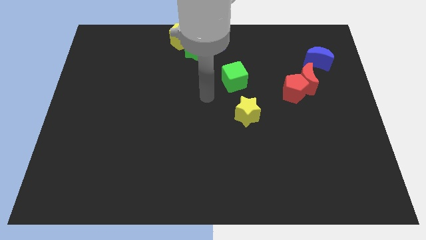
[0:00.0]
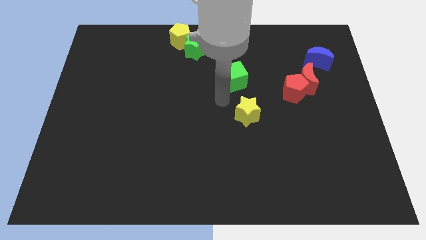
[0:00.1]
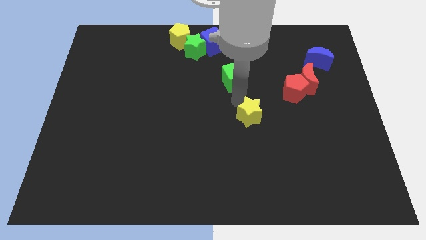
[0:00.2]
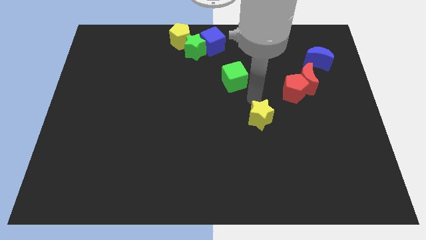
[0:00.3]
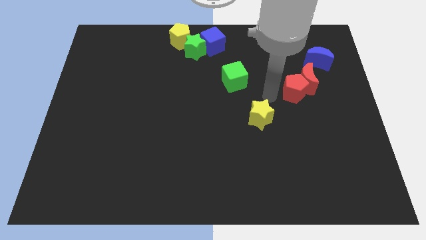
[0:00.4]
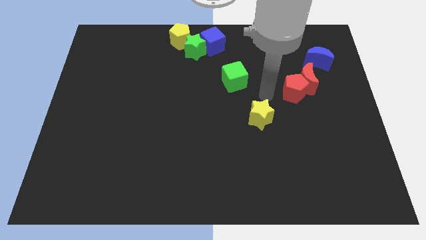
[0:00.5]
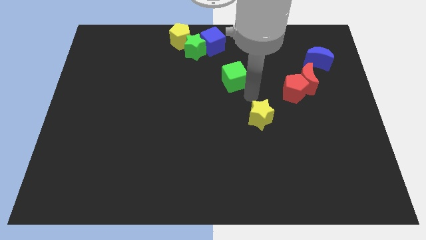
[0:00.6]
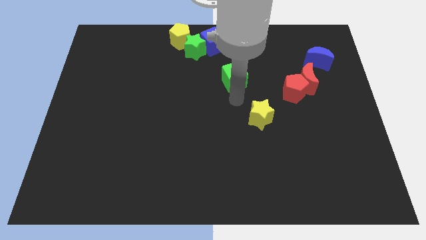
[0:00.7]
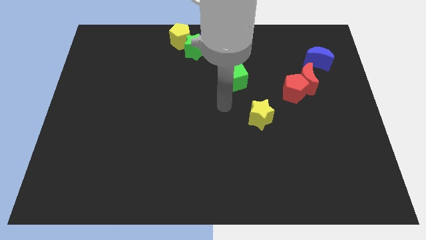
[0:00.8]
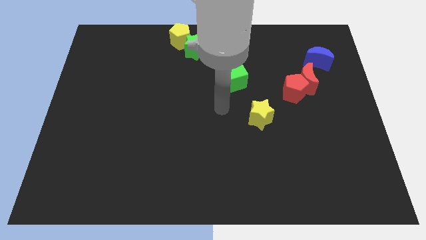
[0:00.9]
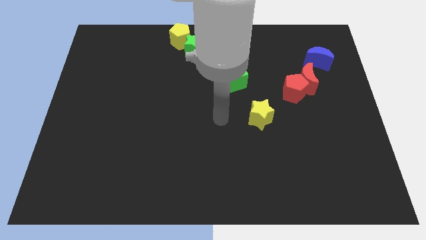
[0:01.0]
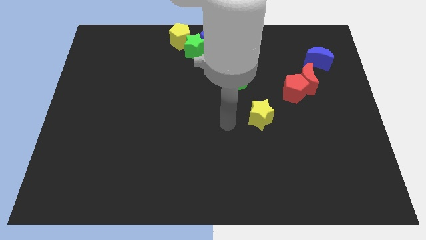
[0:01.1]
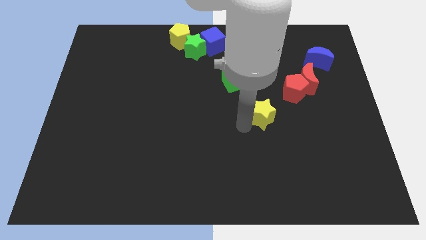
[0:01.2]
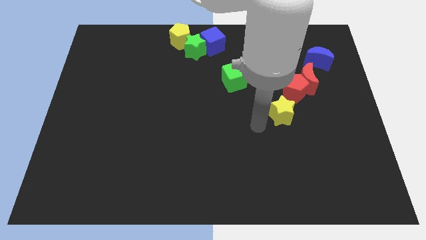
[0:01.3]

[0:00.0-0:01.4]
move the yellow star slightly to the right of the board

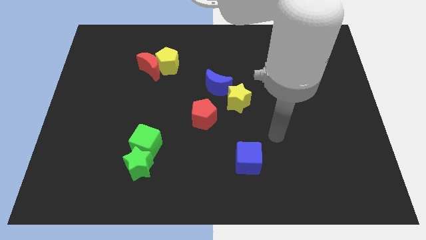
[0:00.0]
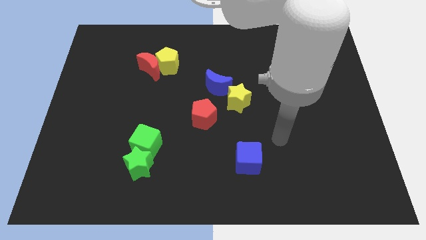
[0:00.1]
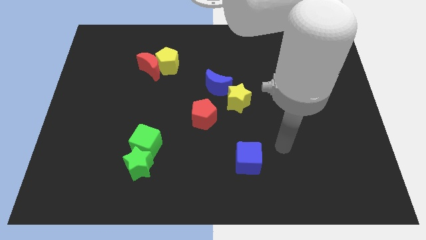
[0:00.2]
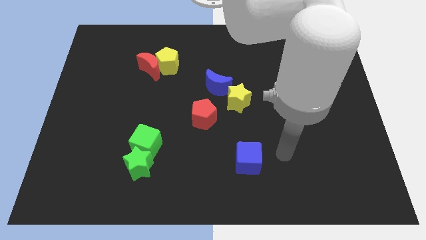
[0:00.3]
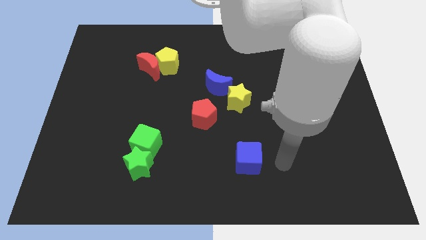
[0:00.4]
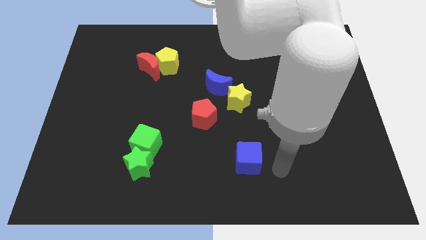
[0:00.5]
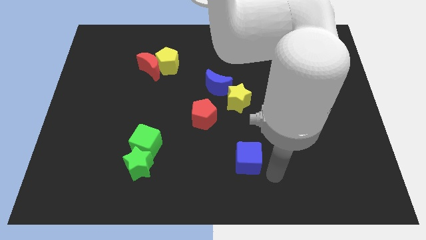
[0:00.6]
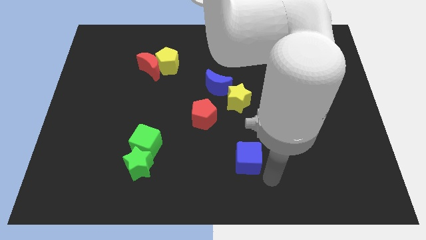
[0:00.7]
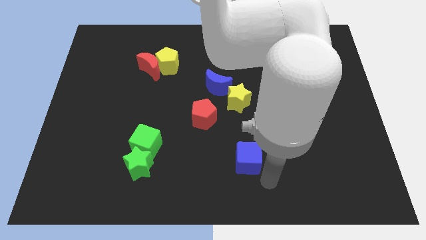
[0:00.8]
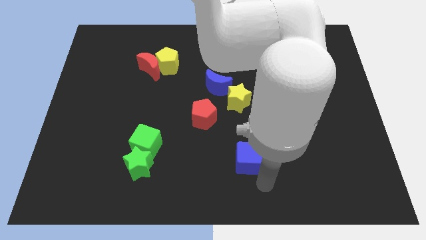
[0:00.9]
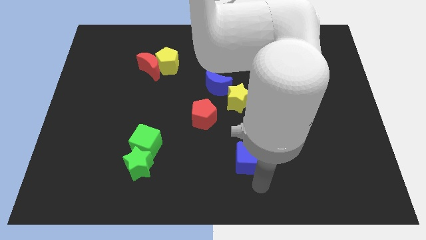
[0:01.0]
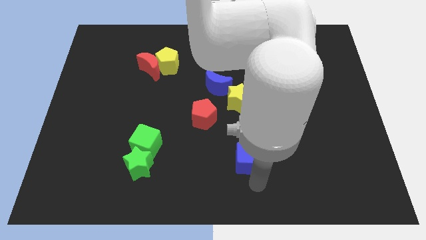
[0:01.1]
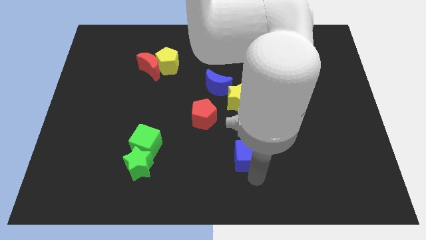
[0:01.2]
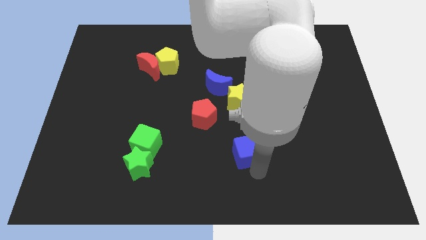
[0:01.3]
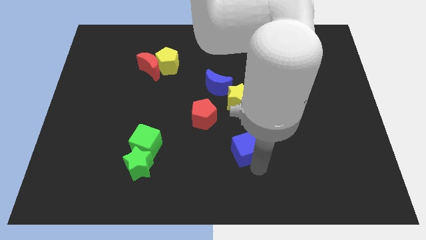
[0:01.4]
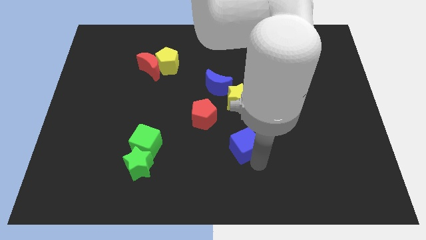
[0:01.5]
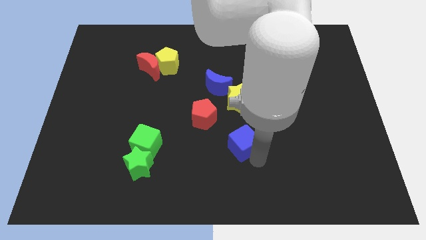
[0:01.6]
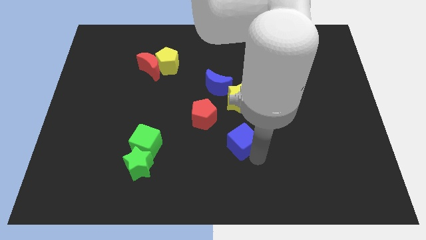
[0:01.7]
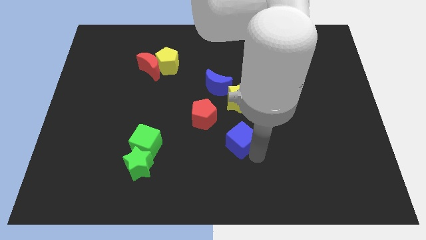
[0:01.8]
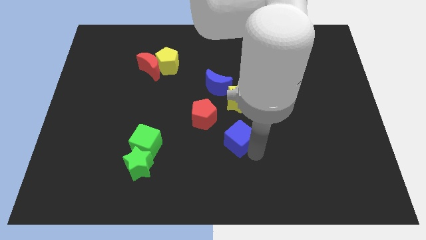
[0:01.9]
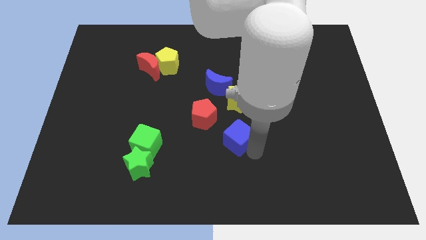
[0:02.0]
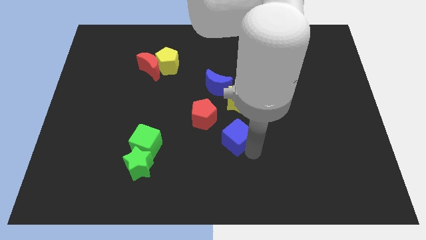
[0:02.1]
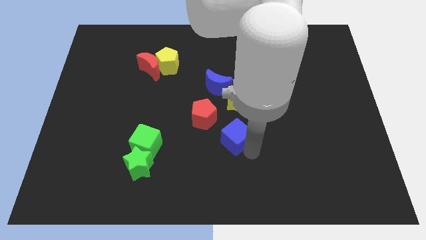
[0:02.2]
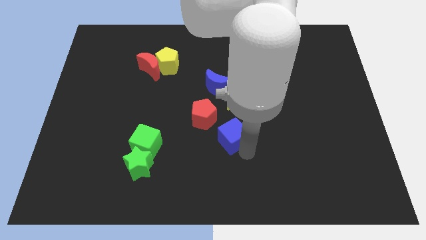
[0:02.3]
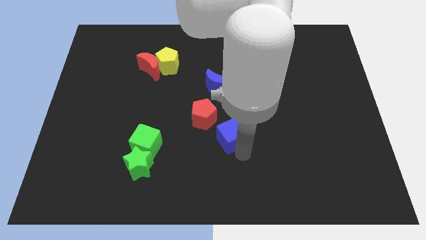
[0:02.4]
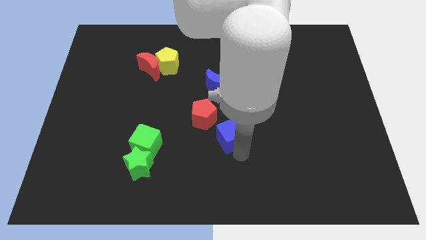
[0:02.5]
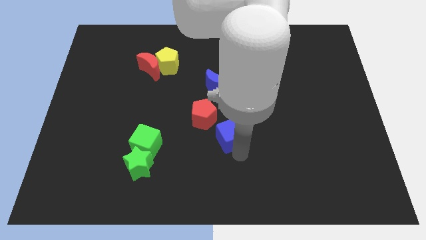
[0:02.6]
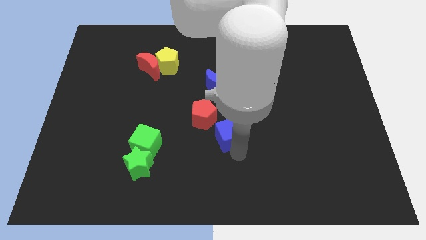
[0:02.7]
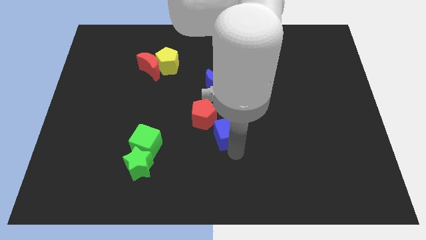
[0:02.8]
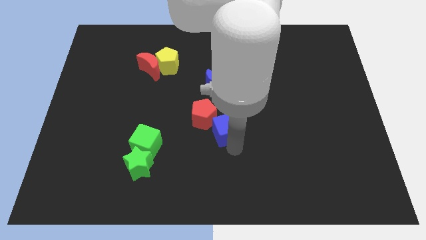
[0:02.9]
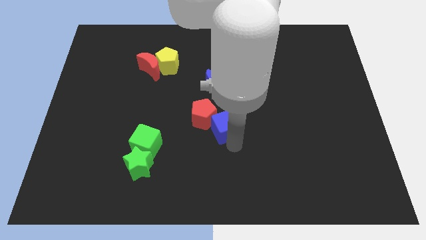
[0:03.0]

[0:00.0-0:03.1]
place the blue cube to the bottom right of the red pentagon

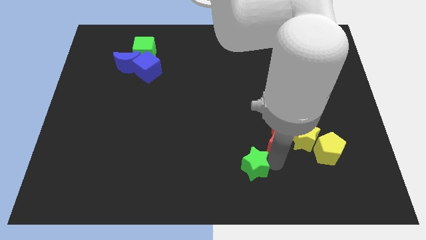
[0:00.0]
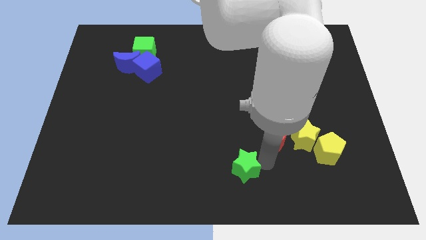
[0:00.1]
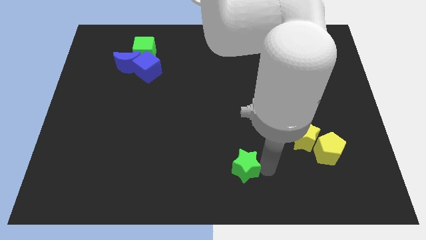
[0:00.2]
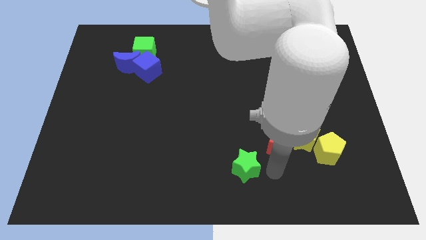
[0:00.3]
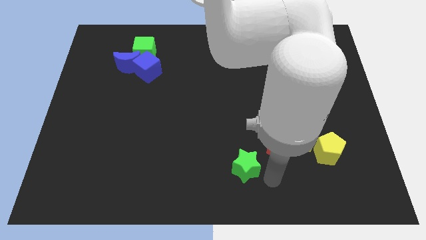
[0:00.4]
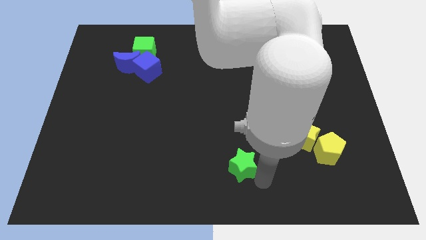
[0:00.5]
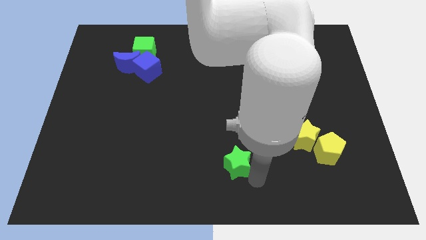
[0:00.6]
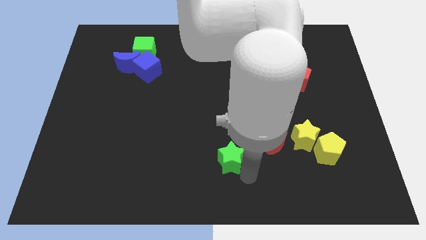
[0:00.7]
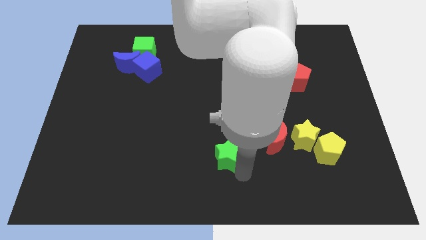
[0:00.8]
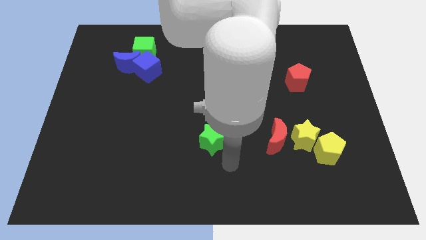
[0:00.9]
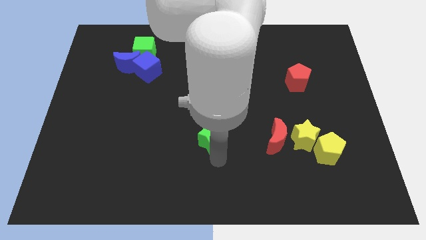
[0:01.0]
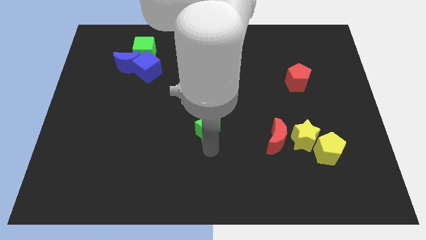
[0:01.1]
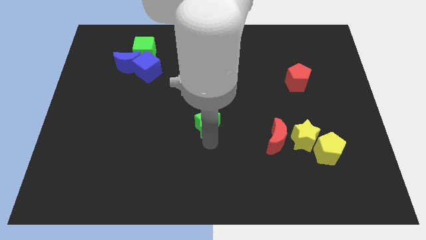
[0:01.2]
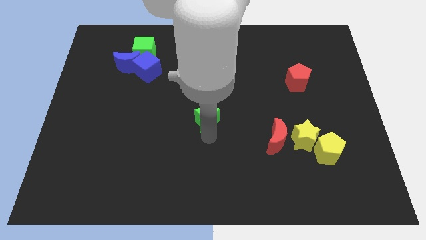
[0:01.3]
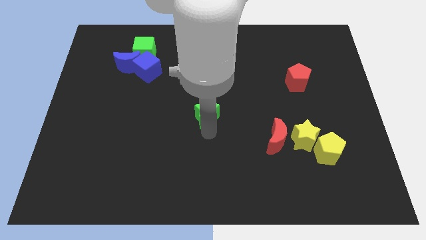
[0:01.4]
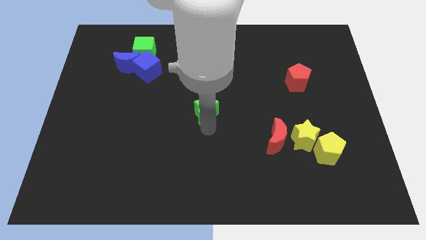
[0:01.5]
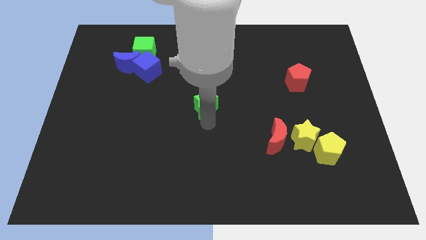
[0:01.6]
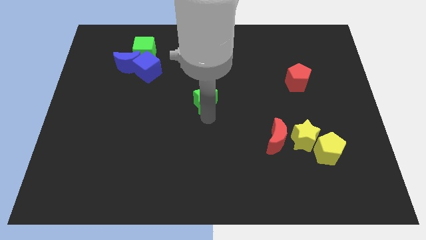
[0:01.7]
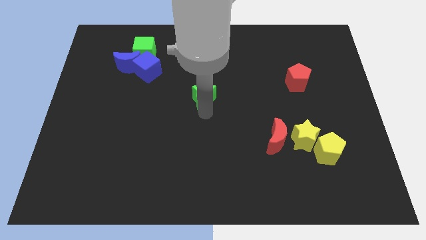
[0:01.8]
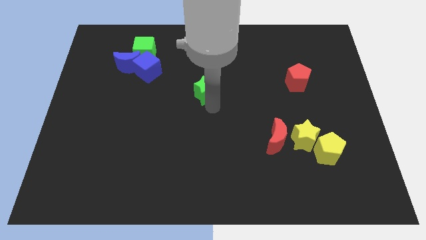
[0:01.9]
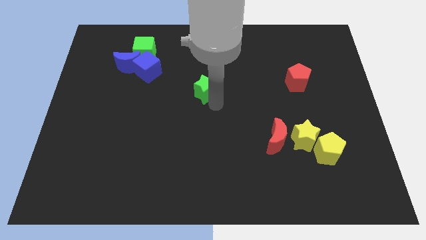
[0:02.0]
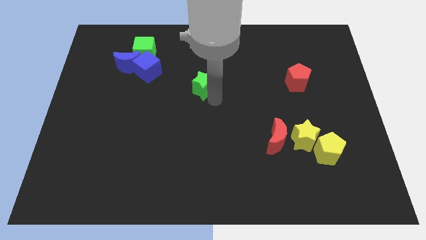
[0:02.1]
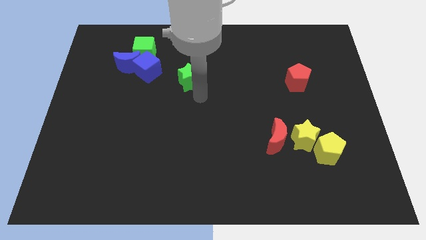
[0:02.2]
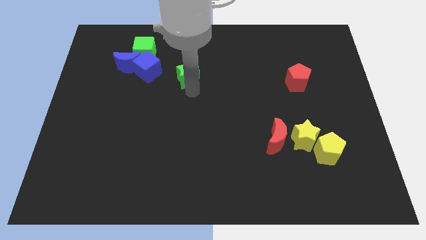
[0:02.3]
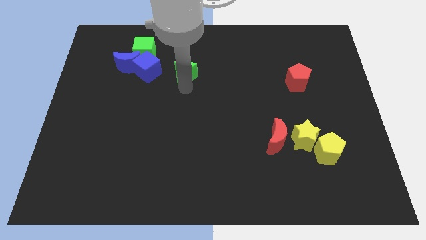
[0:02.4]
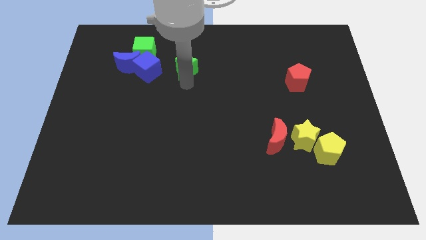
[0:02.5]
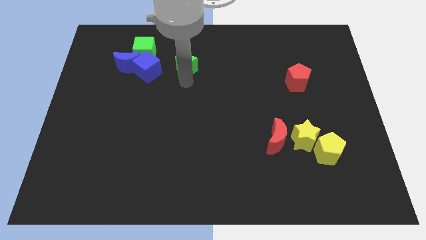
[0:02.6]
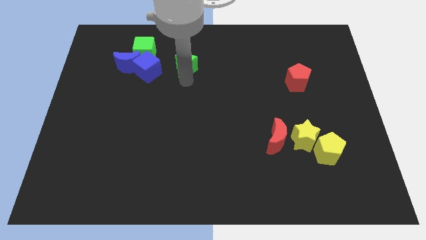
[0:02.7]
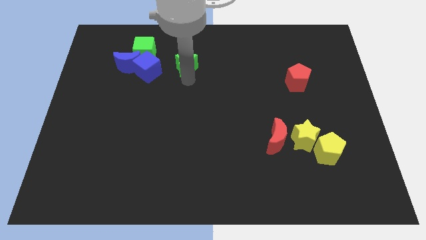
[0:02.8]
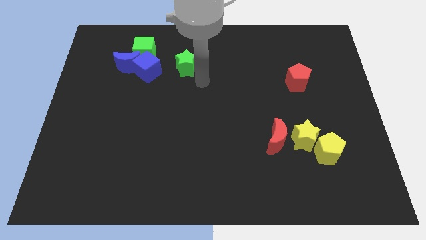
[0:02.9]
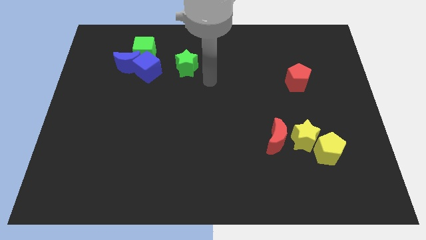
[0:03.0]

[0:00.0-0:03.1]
place green star to the right of blue cube

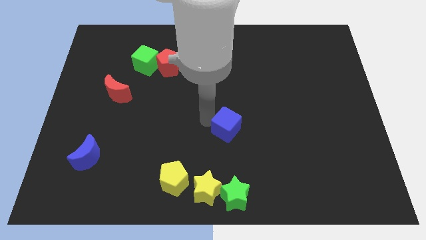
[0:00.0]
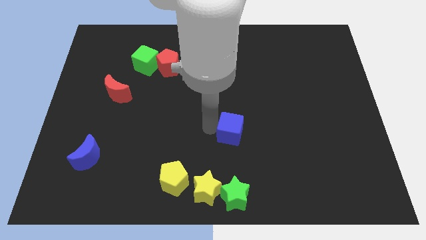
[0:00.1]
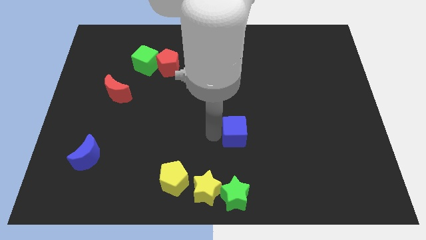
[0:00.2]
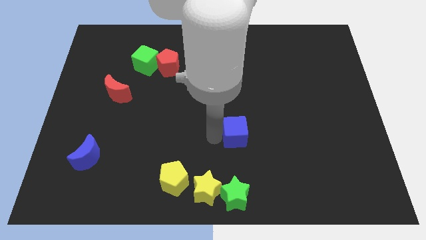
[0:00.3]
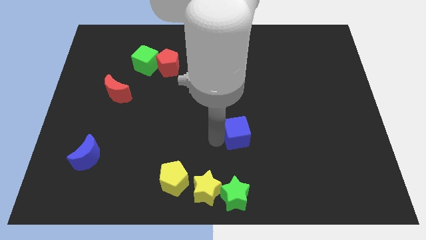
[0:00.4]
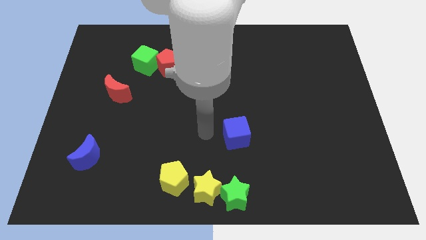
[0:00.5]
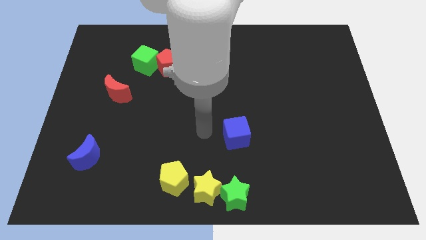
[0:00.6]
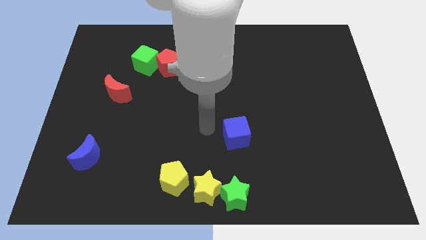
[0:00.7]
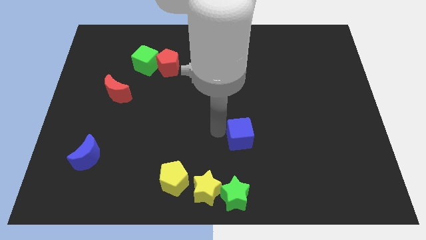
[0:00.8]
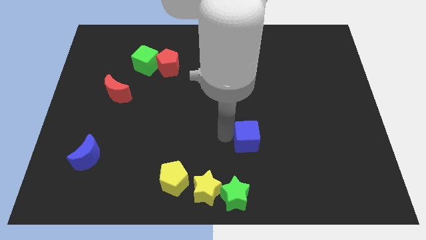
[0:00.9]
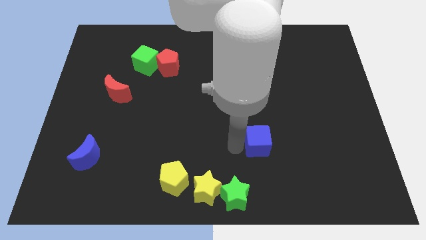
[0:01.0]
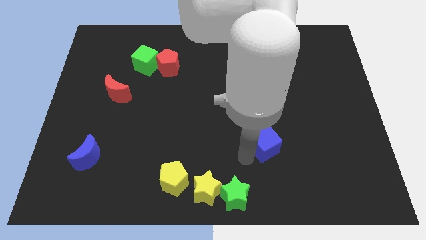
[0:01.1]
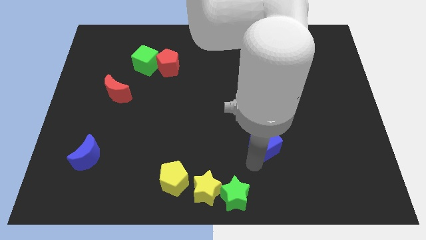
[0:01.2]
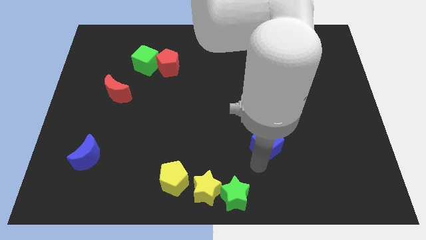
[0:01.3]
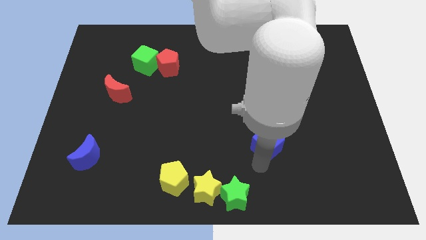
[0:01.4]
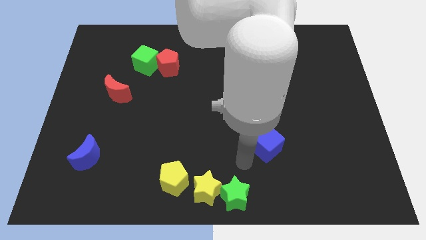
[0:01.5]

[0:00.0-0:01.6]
push the blue cube at the top right side of the green star
